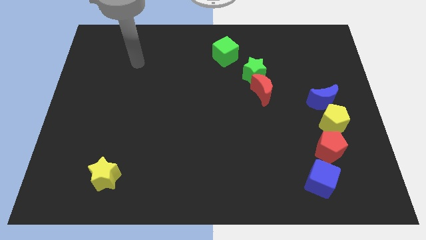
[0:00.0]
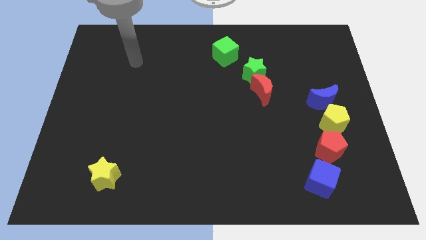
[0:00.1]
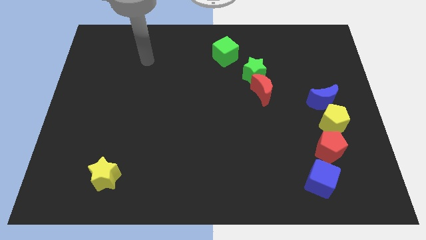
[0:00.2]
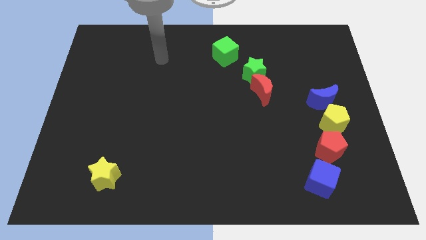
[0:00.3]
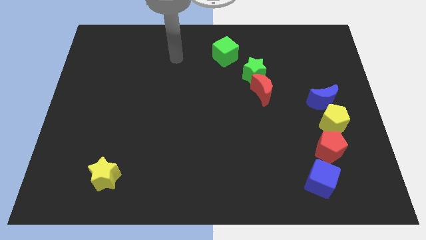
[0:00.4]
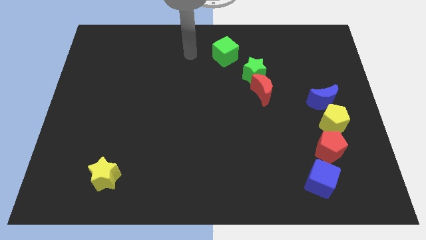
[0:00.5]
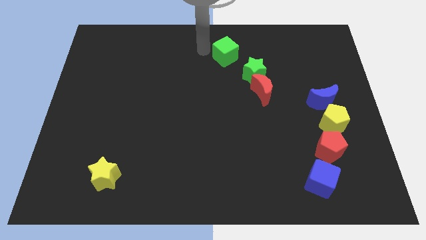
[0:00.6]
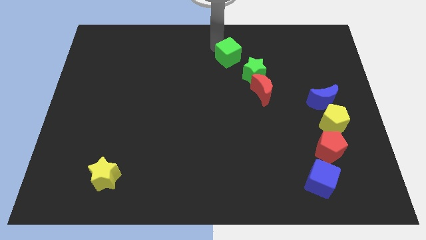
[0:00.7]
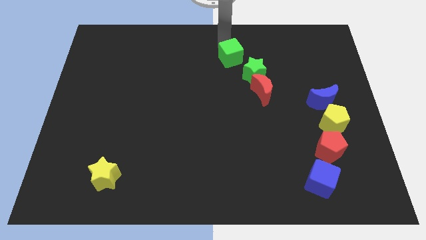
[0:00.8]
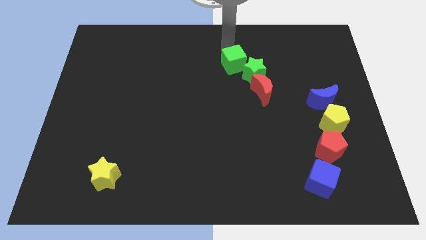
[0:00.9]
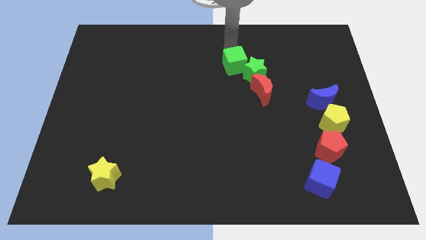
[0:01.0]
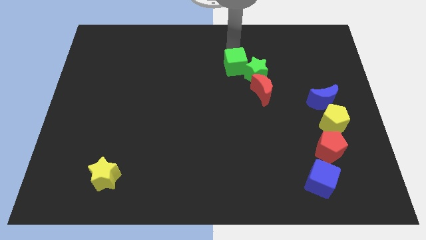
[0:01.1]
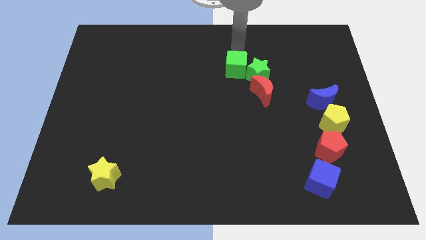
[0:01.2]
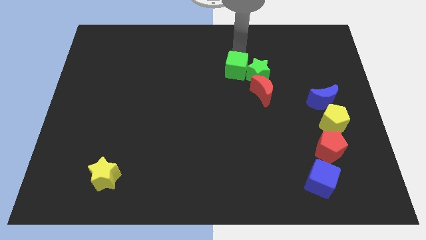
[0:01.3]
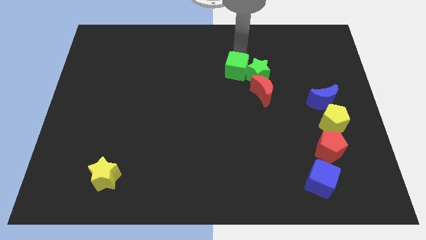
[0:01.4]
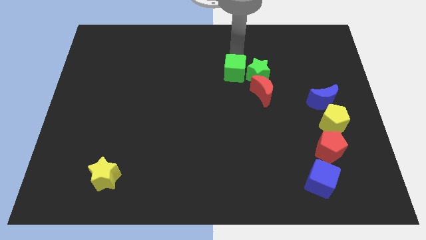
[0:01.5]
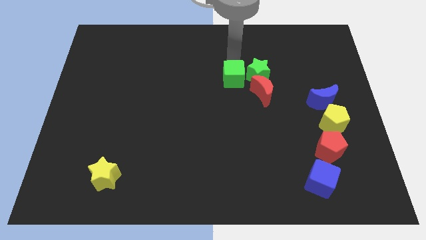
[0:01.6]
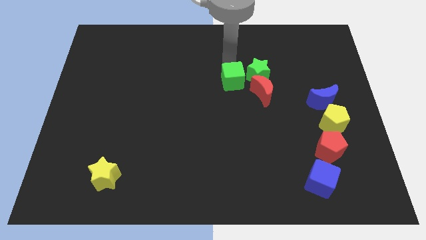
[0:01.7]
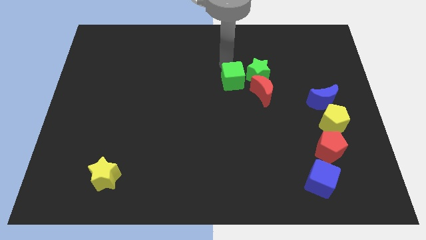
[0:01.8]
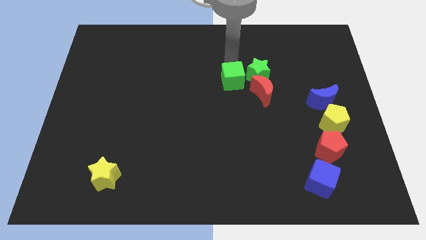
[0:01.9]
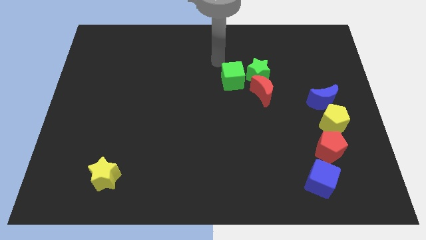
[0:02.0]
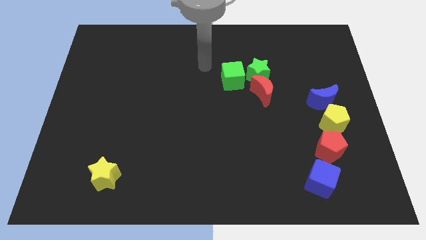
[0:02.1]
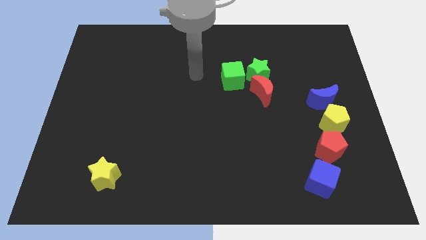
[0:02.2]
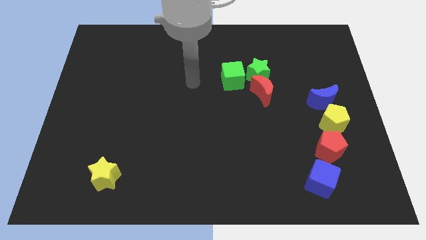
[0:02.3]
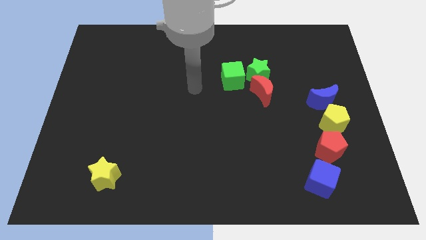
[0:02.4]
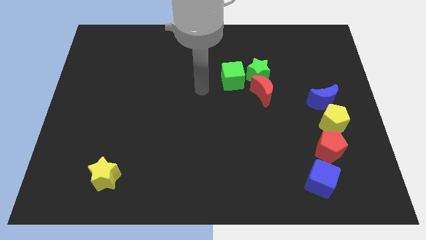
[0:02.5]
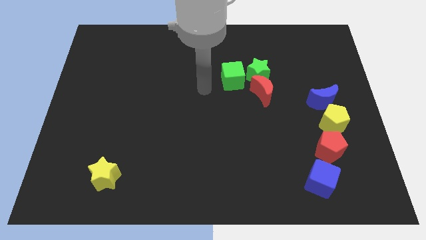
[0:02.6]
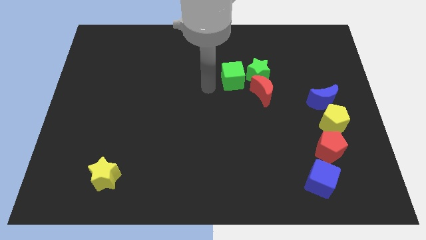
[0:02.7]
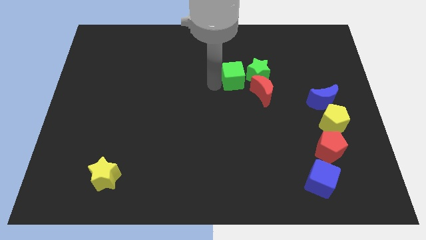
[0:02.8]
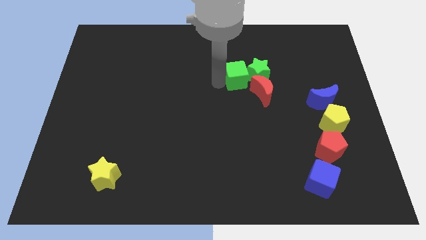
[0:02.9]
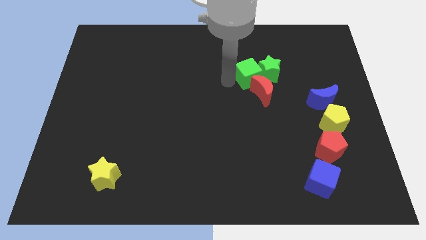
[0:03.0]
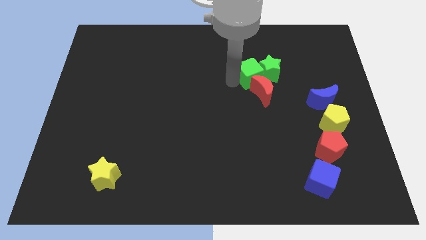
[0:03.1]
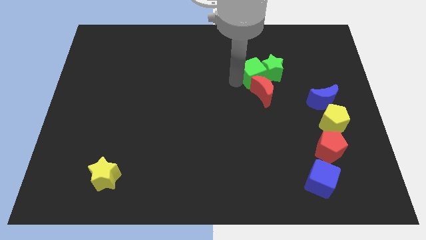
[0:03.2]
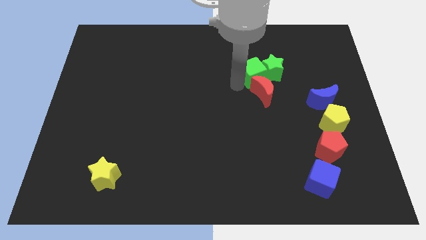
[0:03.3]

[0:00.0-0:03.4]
push the green cube into the green star

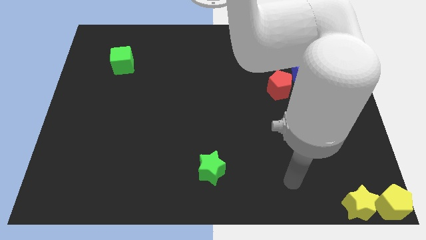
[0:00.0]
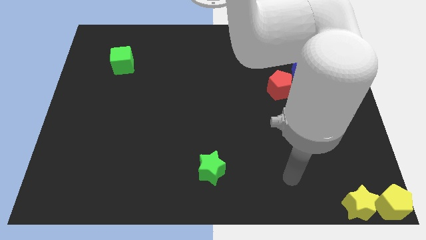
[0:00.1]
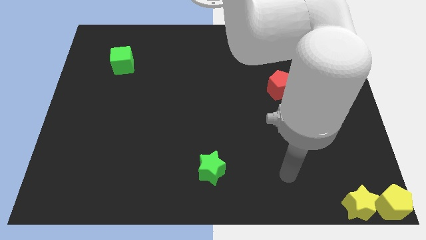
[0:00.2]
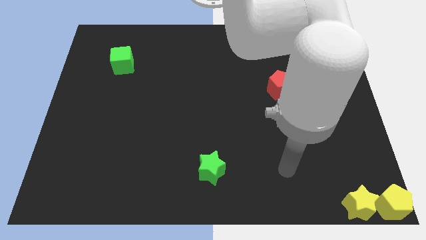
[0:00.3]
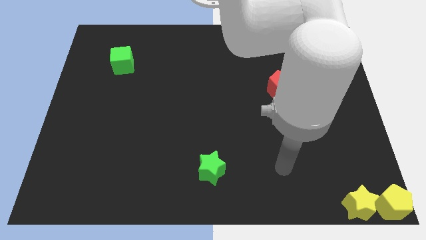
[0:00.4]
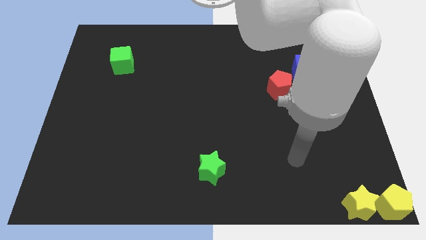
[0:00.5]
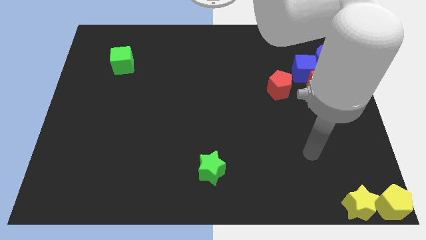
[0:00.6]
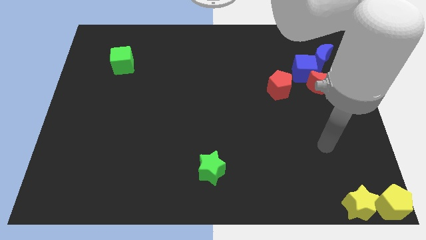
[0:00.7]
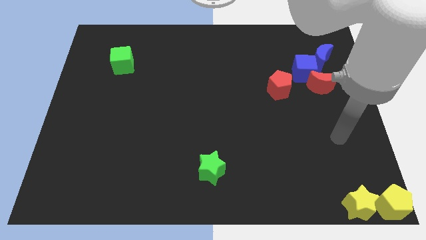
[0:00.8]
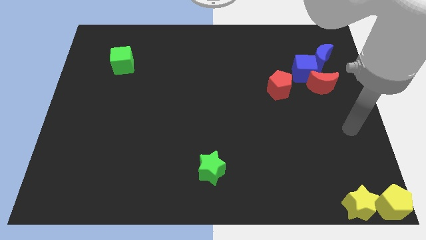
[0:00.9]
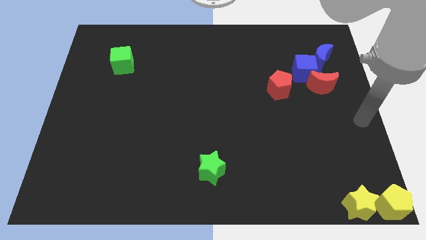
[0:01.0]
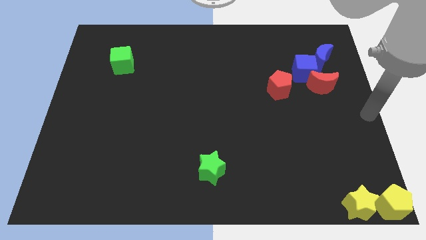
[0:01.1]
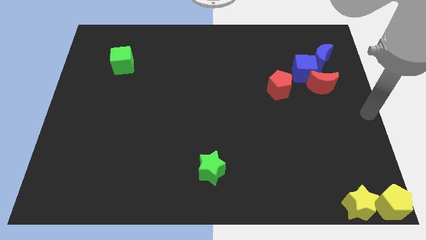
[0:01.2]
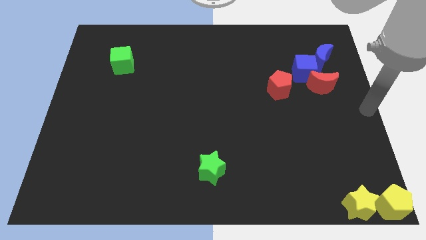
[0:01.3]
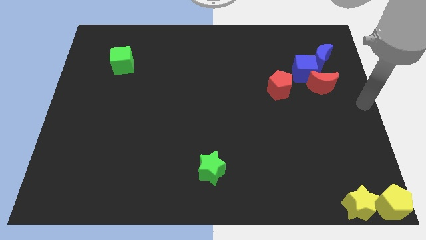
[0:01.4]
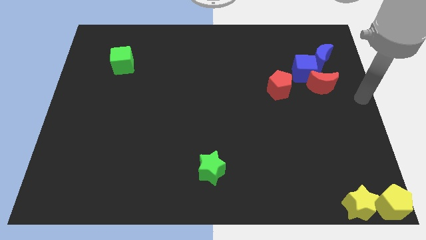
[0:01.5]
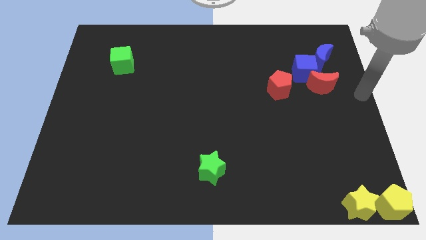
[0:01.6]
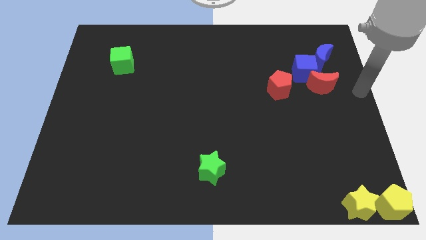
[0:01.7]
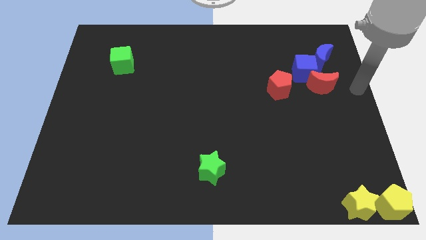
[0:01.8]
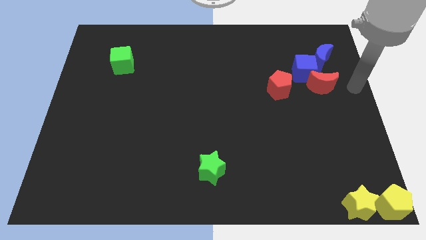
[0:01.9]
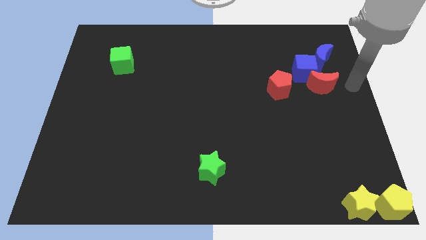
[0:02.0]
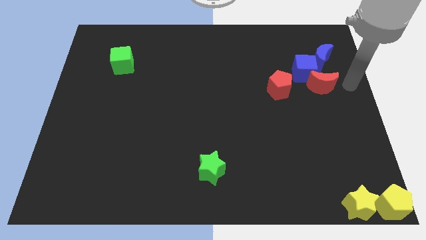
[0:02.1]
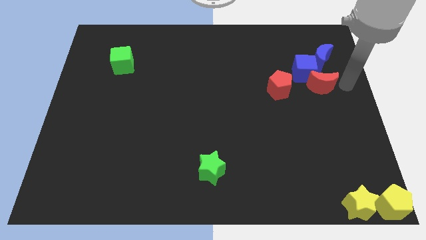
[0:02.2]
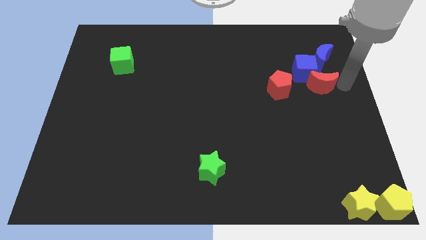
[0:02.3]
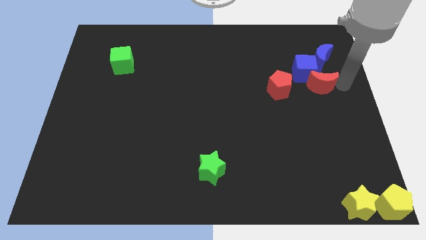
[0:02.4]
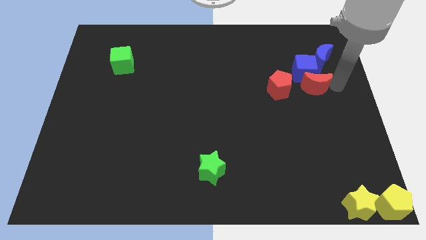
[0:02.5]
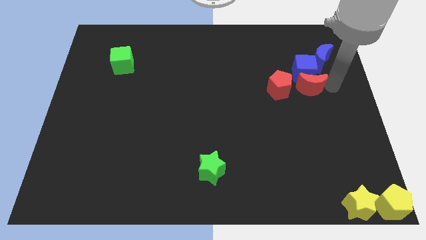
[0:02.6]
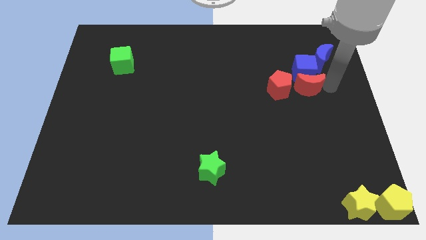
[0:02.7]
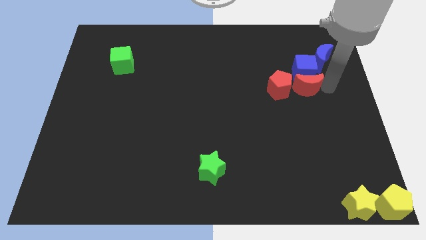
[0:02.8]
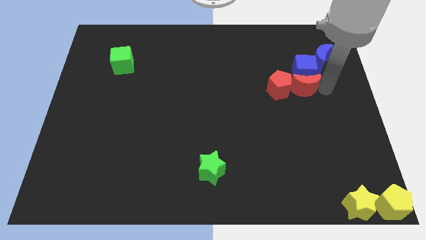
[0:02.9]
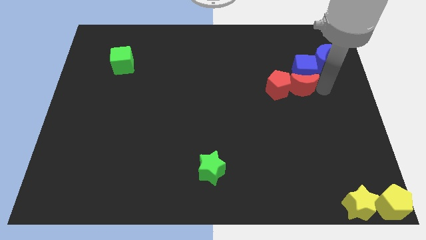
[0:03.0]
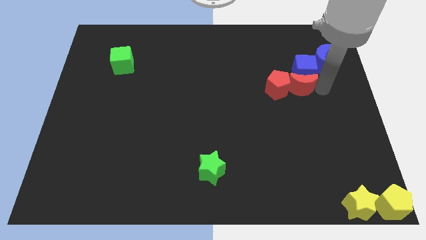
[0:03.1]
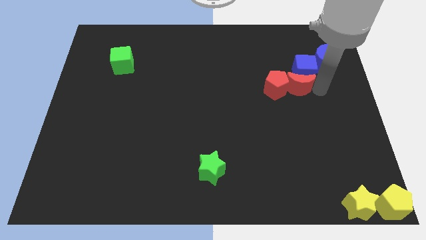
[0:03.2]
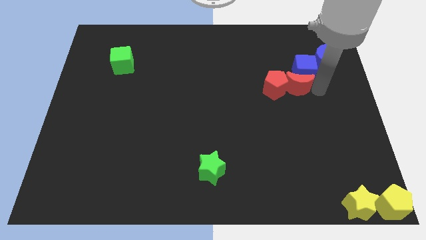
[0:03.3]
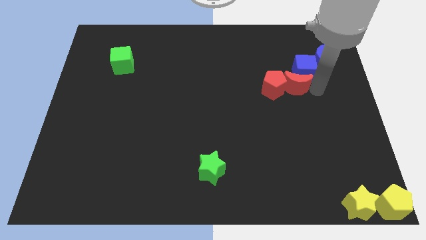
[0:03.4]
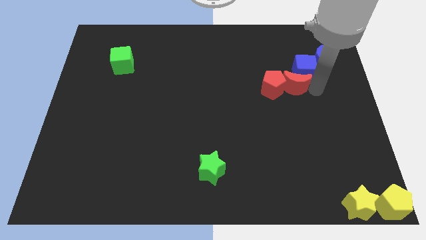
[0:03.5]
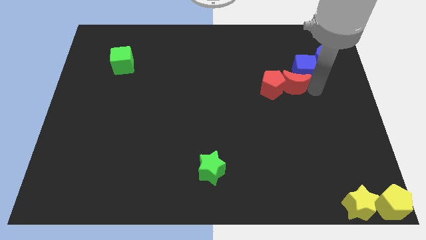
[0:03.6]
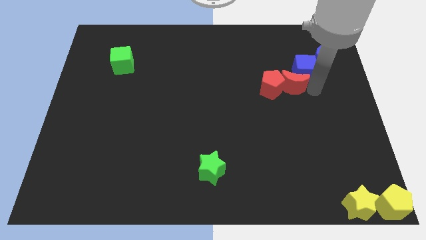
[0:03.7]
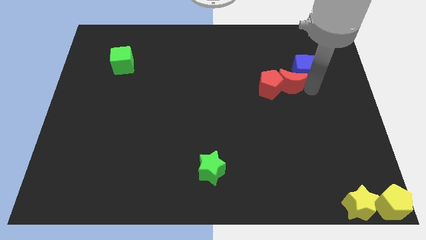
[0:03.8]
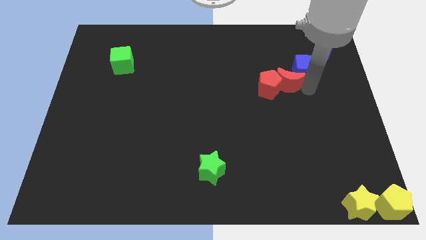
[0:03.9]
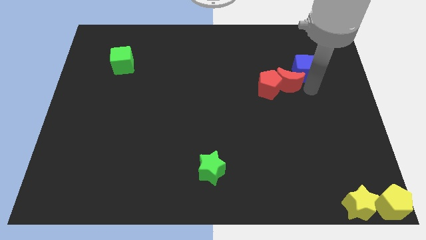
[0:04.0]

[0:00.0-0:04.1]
put the red moon into the red pentagon

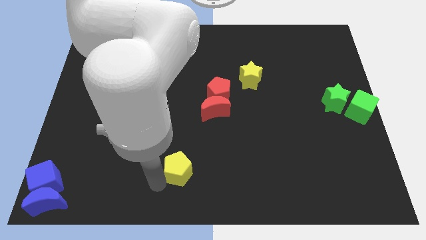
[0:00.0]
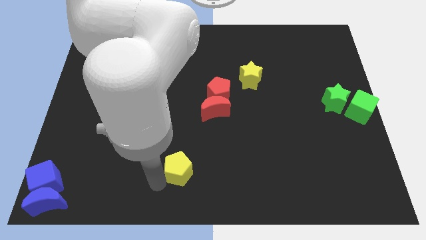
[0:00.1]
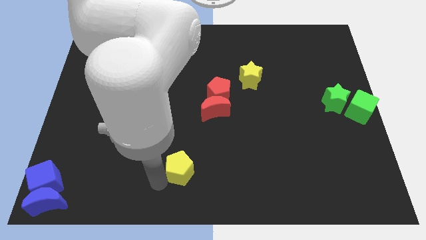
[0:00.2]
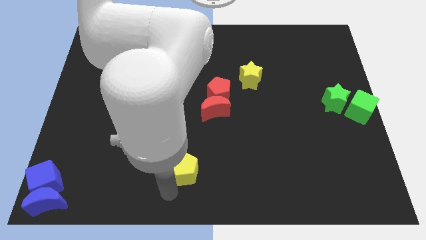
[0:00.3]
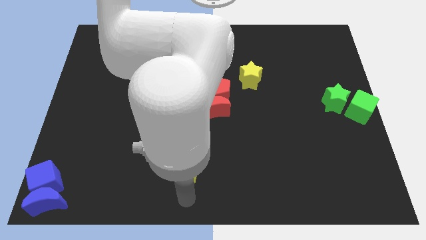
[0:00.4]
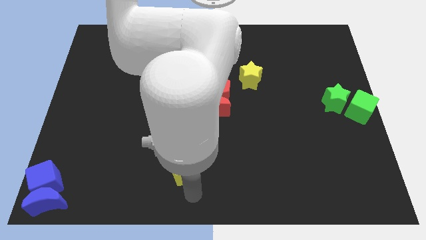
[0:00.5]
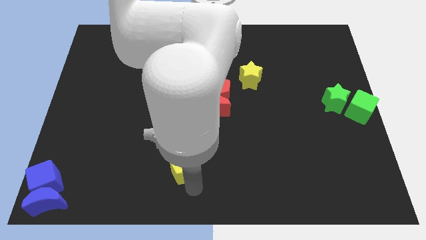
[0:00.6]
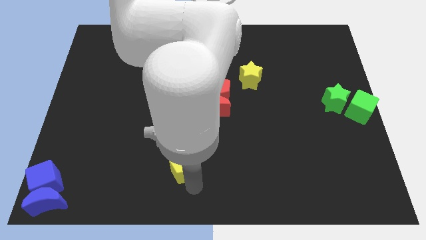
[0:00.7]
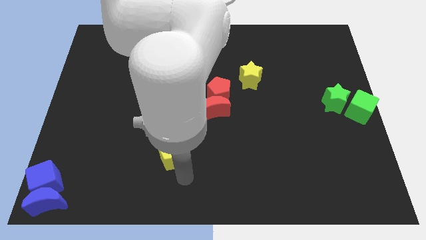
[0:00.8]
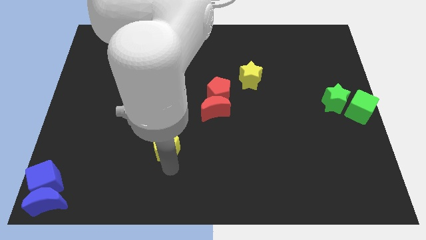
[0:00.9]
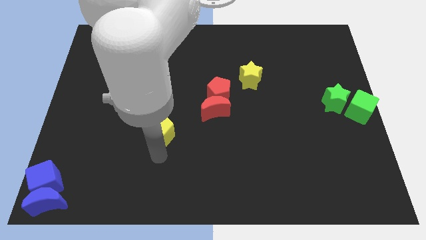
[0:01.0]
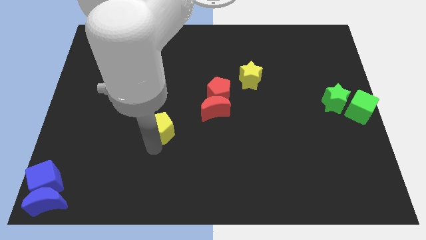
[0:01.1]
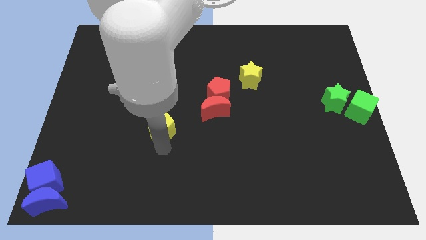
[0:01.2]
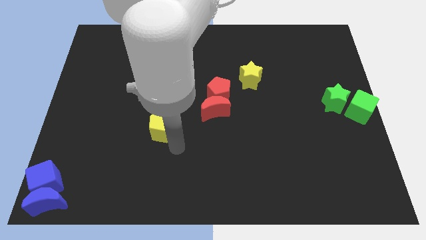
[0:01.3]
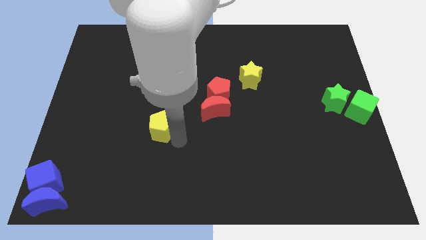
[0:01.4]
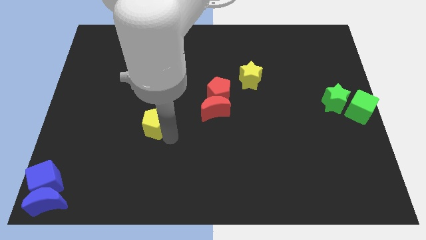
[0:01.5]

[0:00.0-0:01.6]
move the yellow pentagon slightly up
